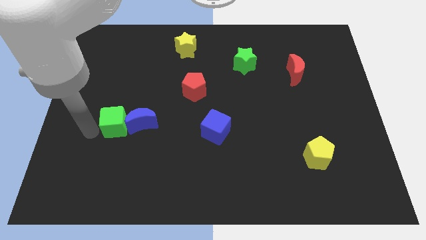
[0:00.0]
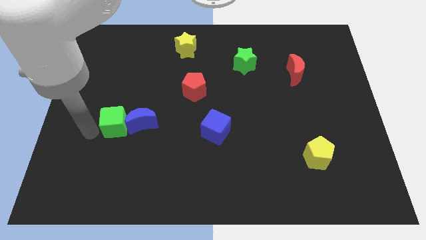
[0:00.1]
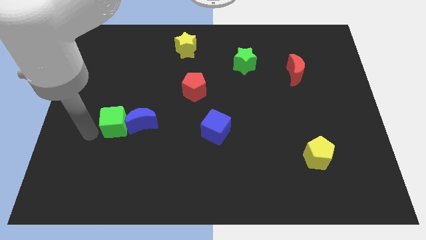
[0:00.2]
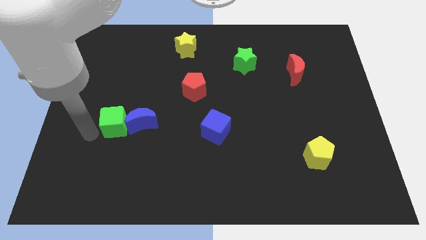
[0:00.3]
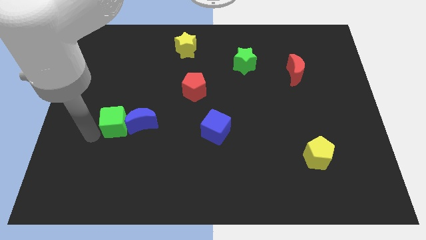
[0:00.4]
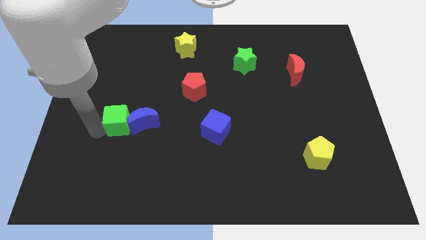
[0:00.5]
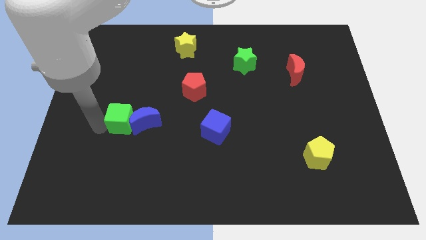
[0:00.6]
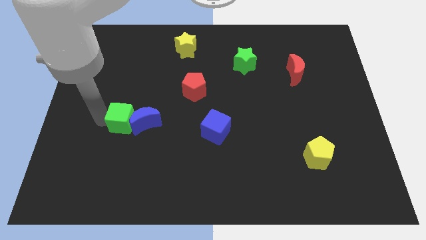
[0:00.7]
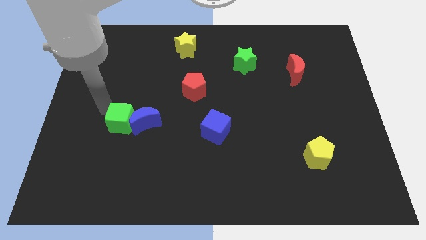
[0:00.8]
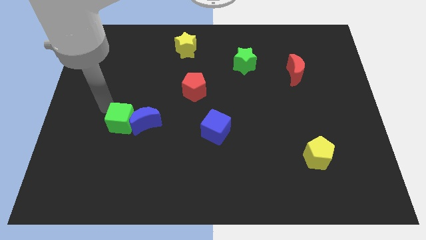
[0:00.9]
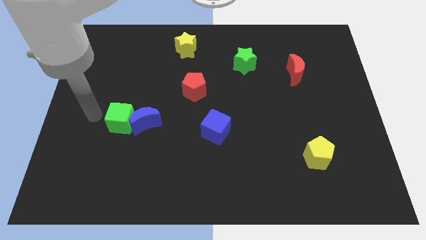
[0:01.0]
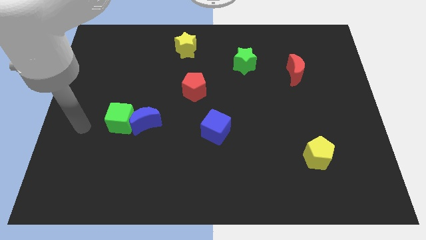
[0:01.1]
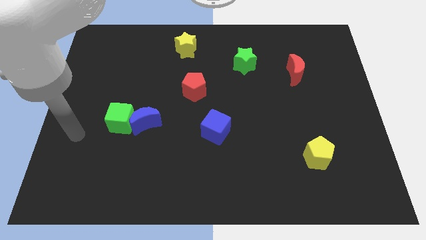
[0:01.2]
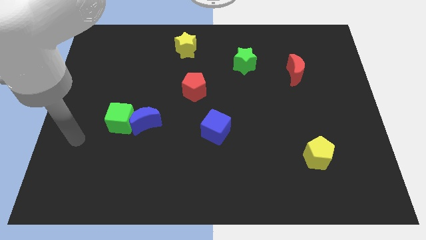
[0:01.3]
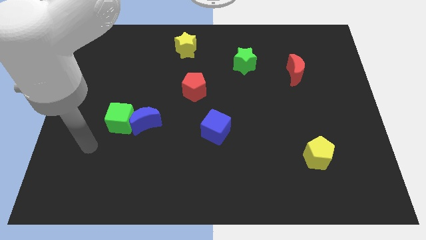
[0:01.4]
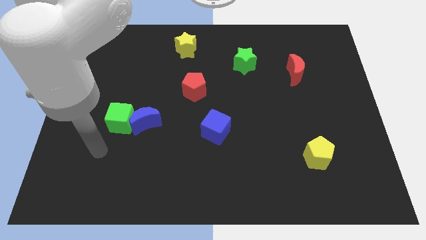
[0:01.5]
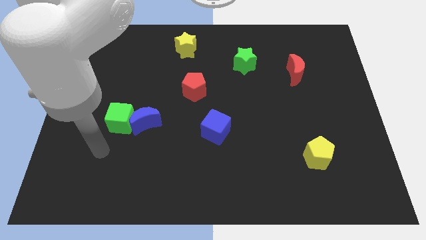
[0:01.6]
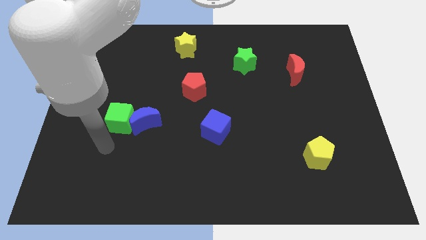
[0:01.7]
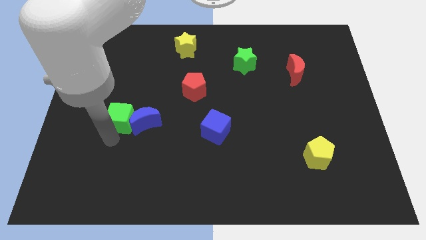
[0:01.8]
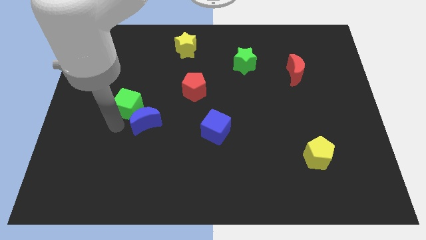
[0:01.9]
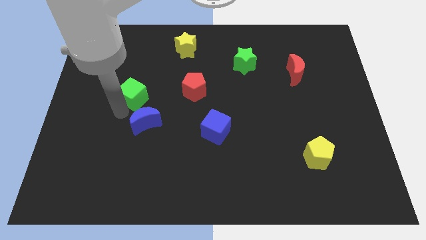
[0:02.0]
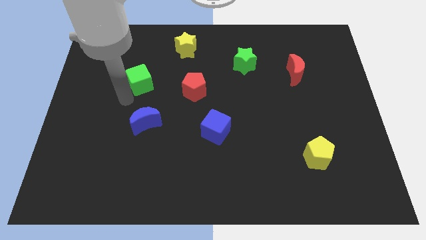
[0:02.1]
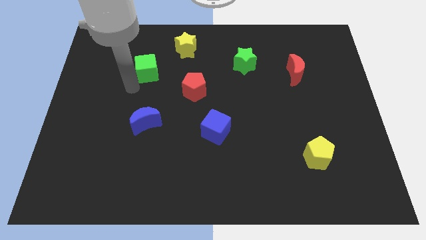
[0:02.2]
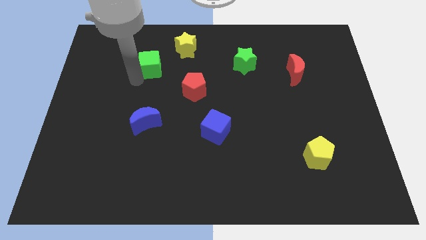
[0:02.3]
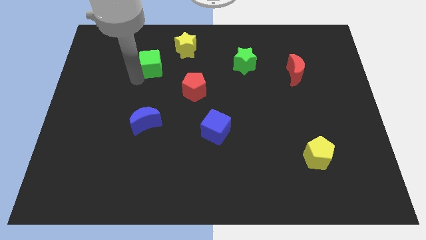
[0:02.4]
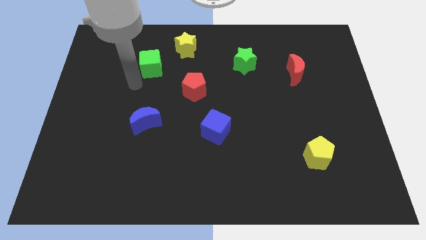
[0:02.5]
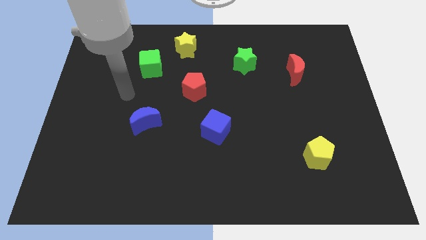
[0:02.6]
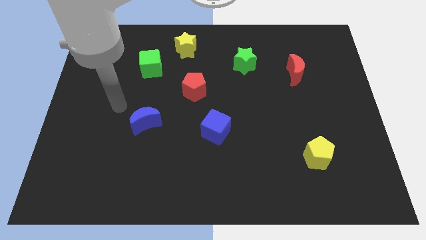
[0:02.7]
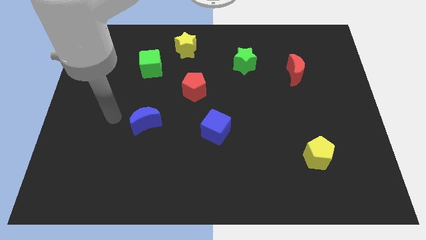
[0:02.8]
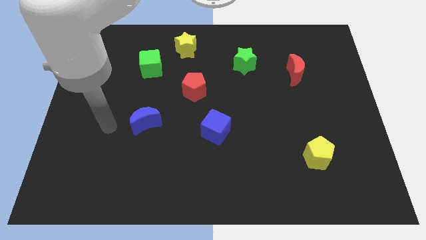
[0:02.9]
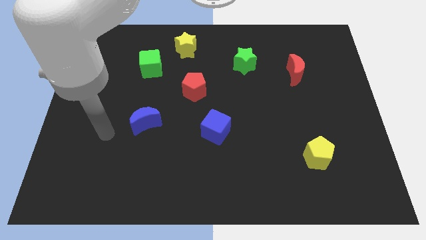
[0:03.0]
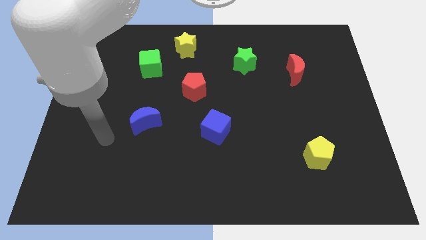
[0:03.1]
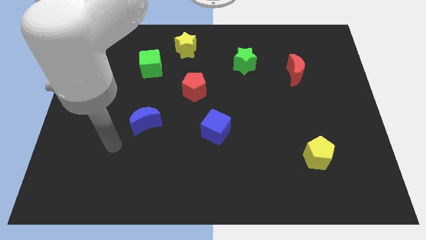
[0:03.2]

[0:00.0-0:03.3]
push the green cube into the blue crescent

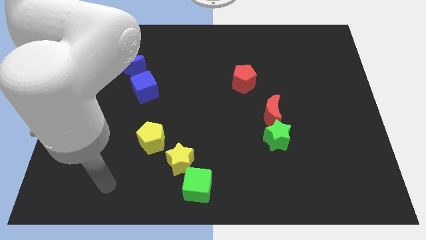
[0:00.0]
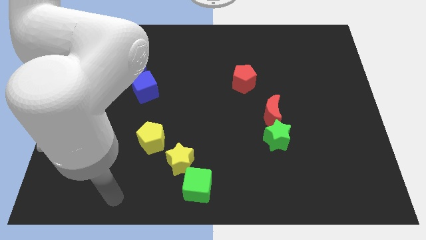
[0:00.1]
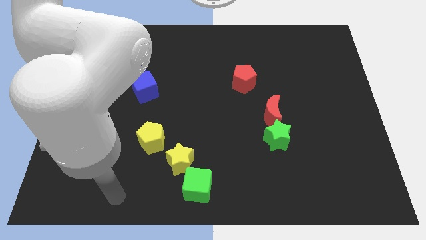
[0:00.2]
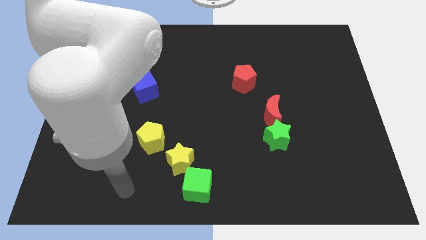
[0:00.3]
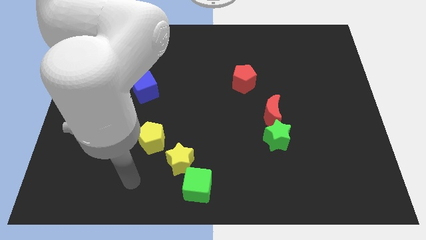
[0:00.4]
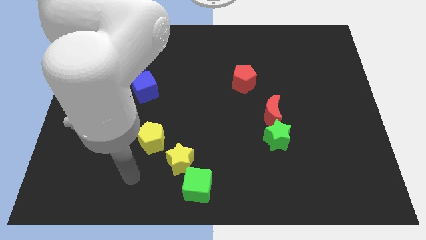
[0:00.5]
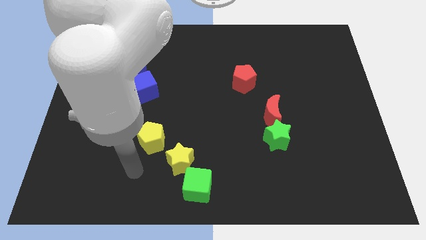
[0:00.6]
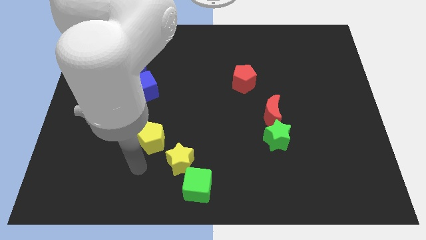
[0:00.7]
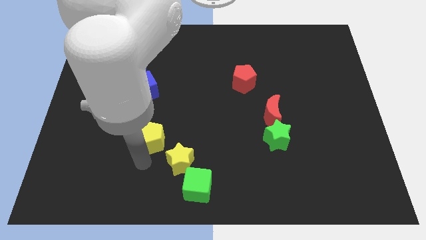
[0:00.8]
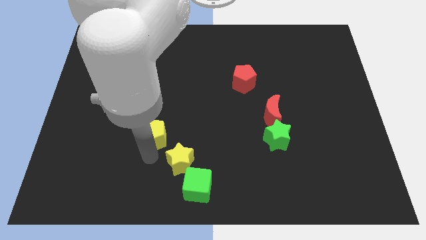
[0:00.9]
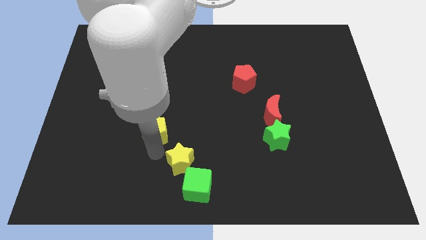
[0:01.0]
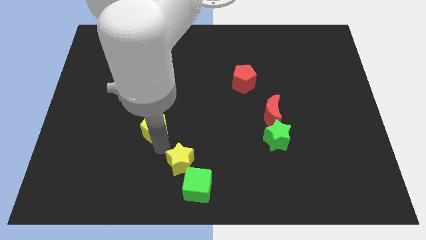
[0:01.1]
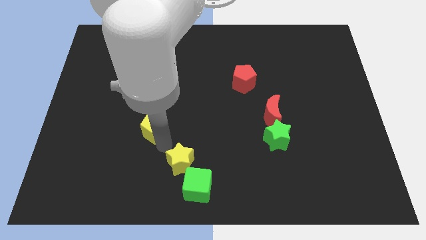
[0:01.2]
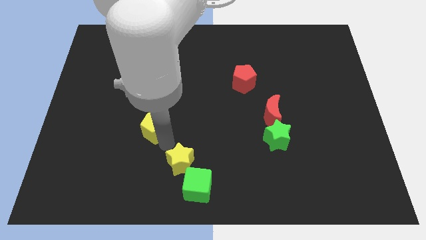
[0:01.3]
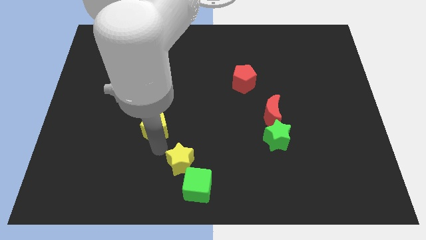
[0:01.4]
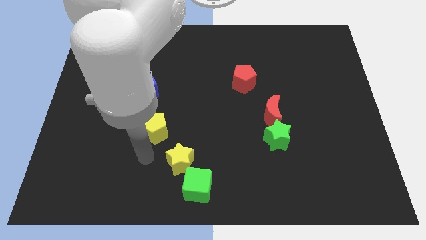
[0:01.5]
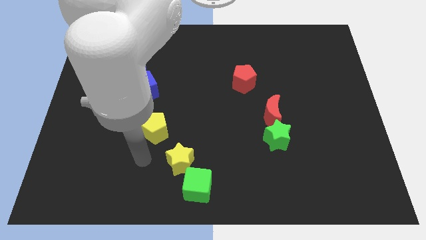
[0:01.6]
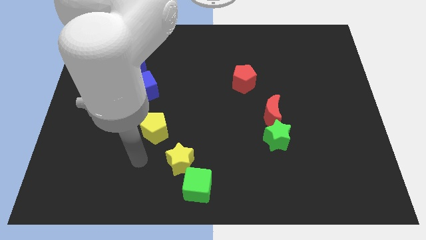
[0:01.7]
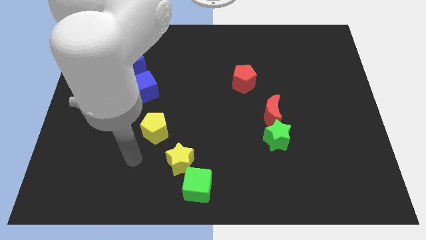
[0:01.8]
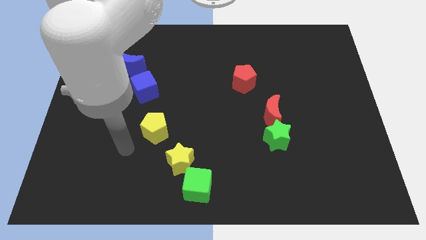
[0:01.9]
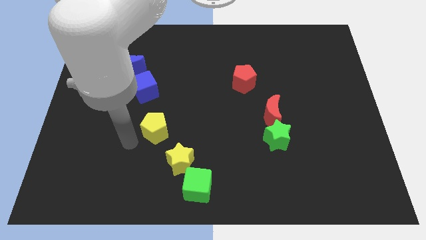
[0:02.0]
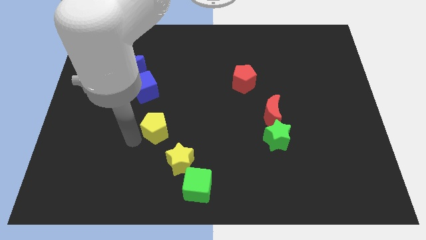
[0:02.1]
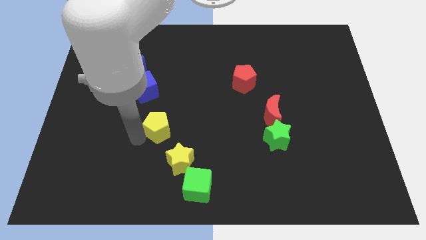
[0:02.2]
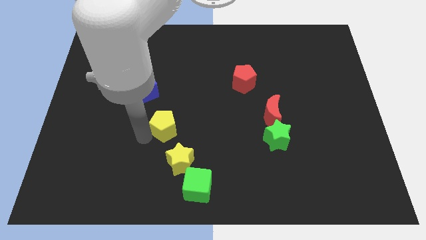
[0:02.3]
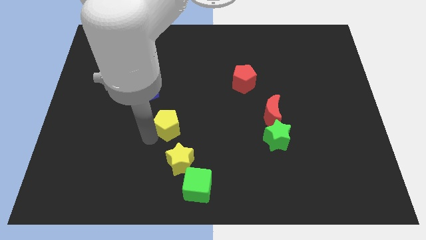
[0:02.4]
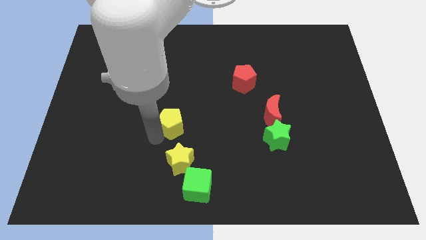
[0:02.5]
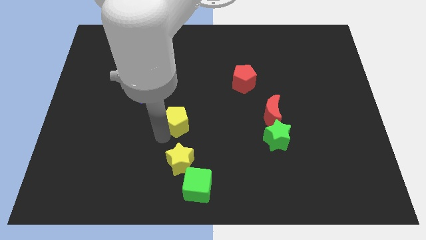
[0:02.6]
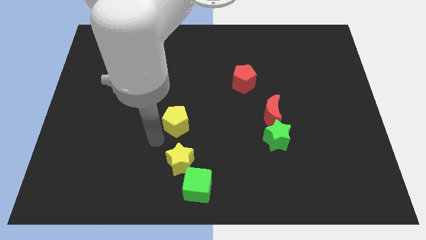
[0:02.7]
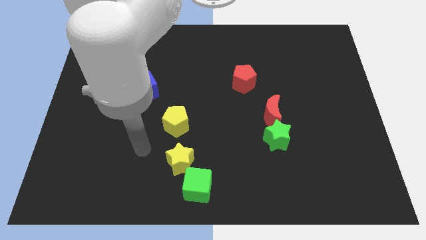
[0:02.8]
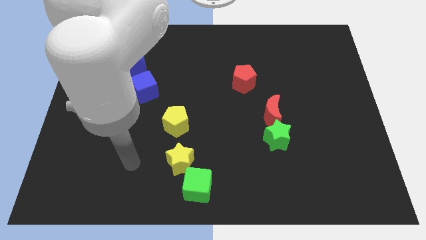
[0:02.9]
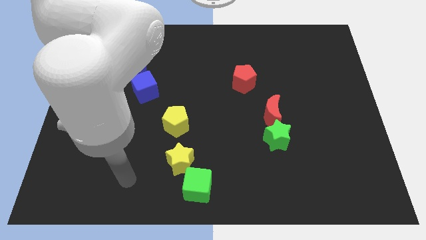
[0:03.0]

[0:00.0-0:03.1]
place yellow pentagon diagonal to blue cube

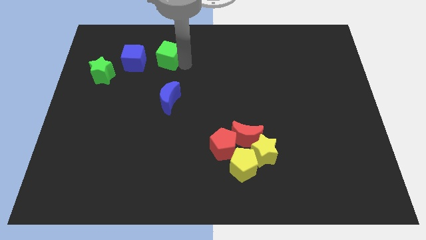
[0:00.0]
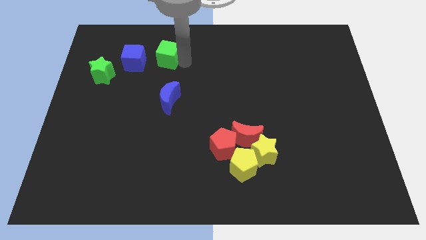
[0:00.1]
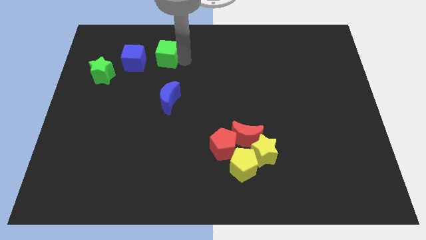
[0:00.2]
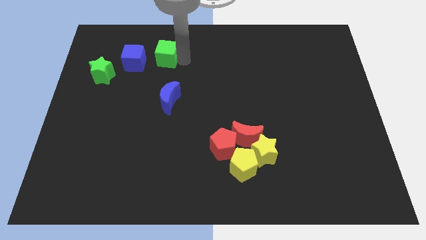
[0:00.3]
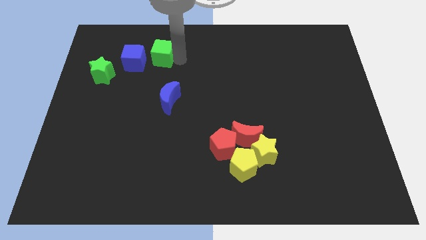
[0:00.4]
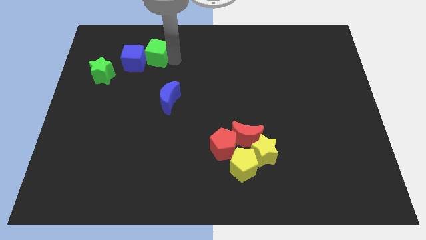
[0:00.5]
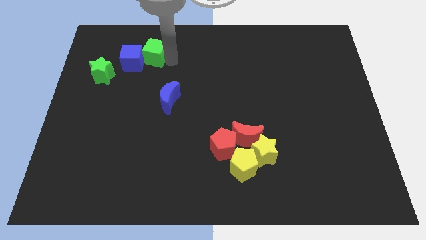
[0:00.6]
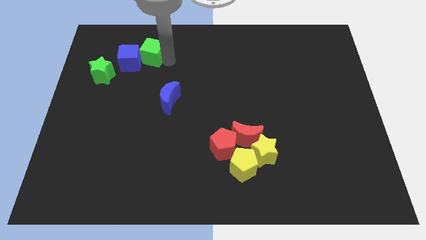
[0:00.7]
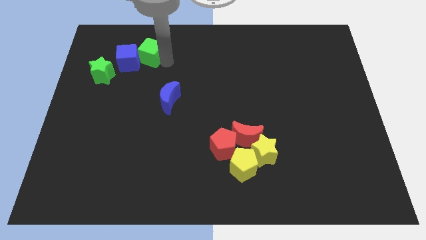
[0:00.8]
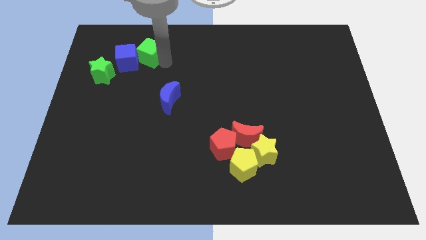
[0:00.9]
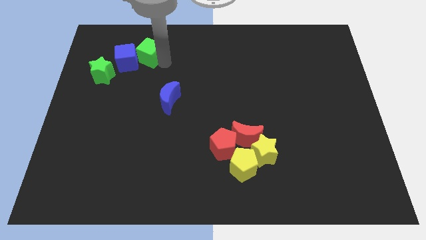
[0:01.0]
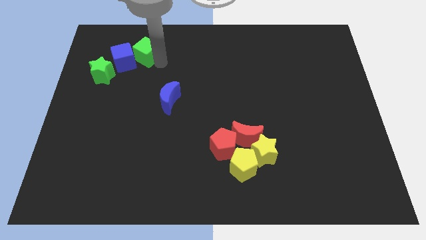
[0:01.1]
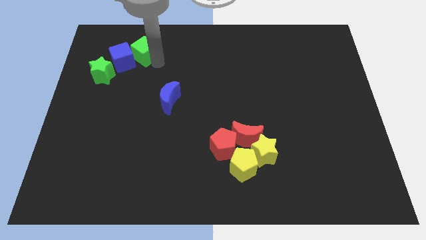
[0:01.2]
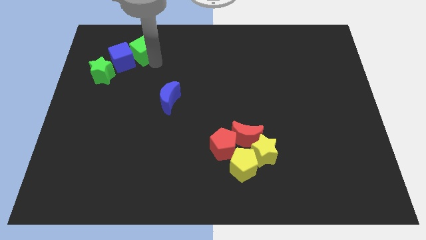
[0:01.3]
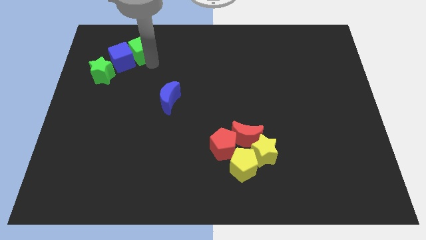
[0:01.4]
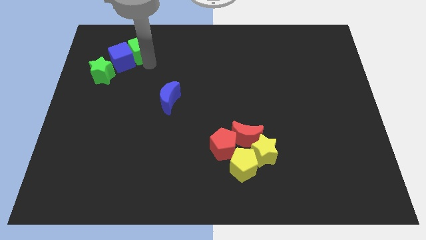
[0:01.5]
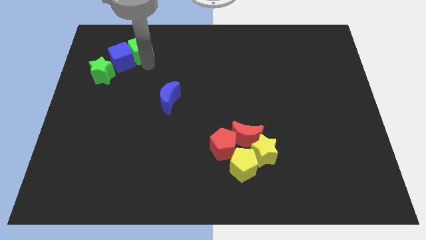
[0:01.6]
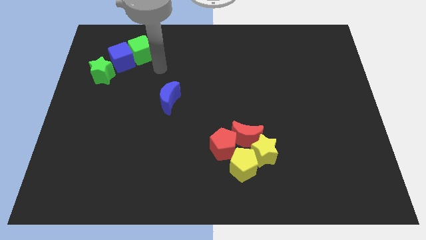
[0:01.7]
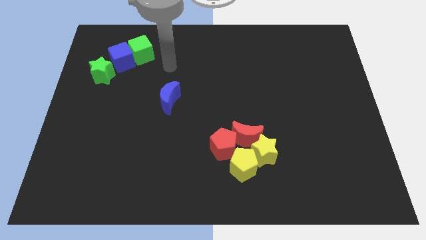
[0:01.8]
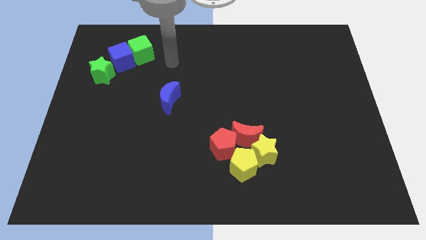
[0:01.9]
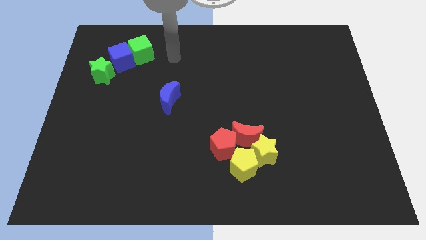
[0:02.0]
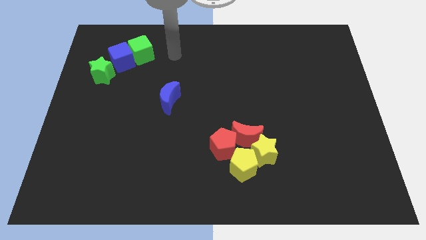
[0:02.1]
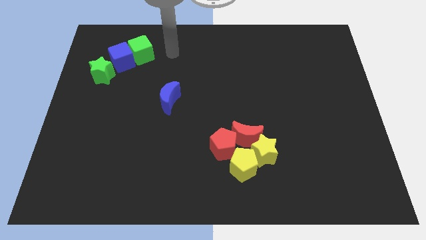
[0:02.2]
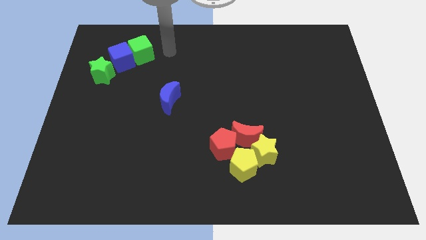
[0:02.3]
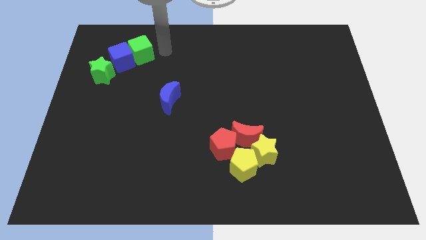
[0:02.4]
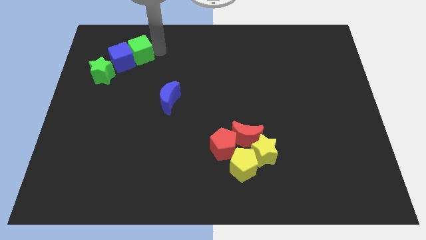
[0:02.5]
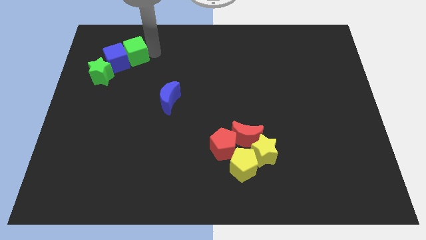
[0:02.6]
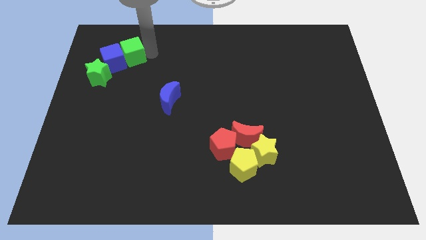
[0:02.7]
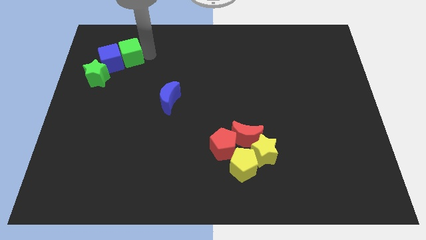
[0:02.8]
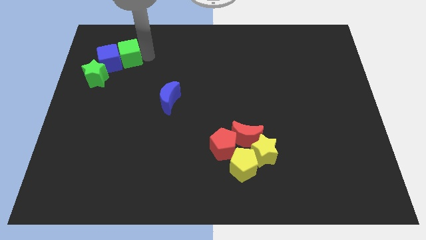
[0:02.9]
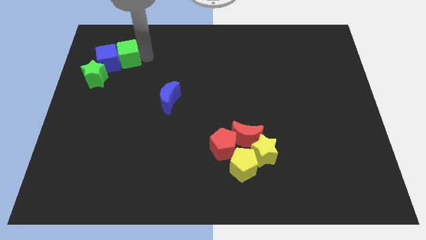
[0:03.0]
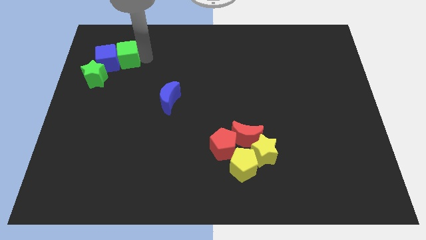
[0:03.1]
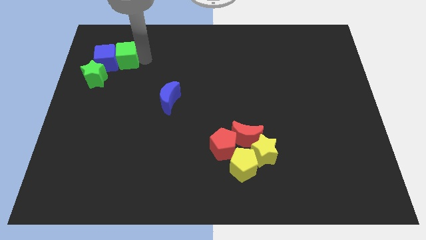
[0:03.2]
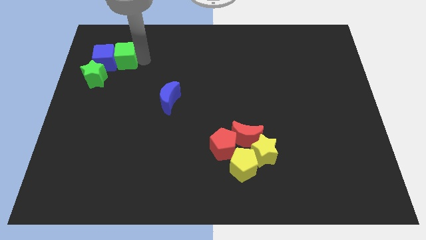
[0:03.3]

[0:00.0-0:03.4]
place the green cube into the blue cube
